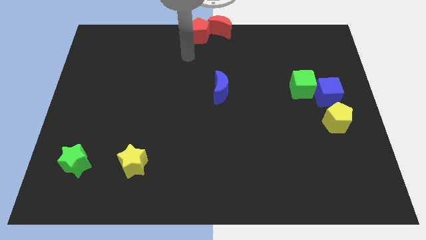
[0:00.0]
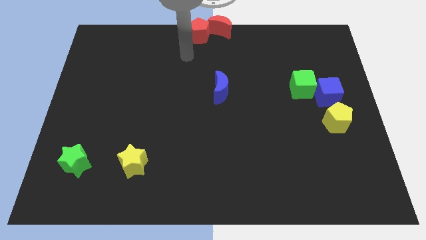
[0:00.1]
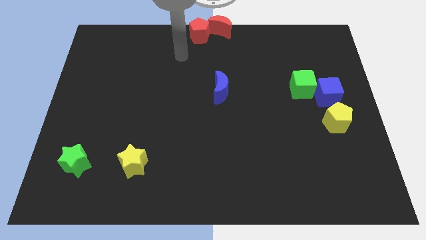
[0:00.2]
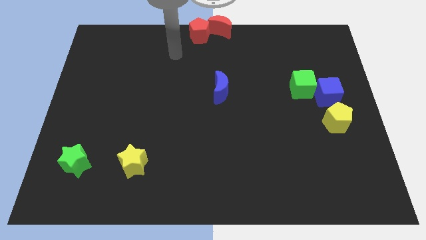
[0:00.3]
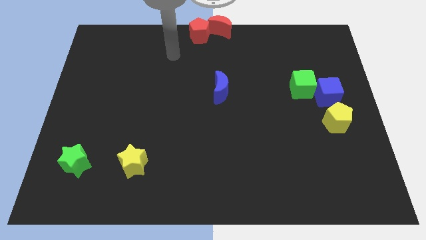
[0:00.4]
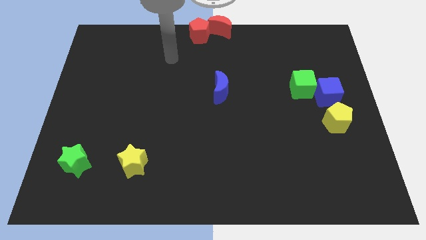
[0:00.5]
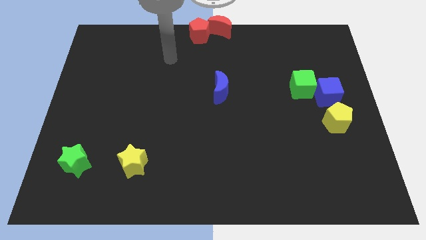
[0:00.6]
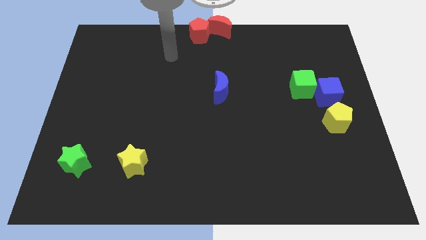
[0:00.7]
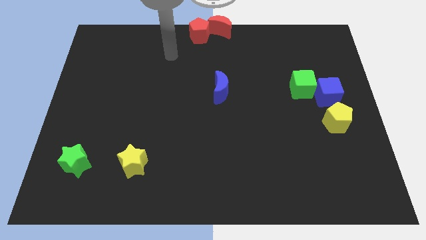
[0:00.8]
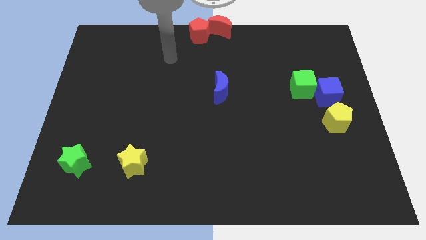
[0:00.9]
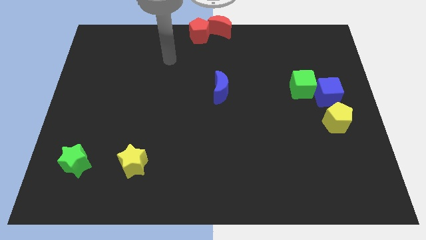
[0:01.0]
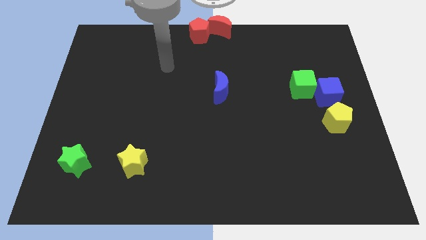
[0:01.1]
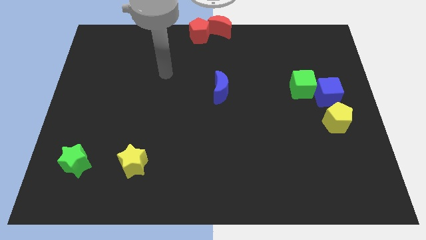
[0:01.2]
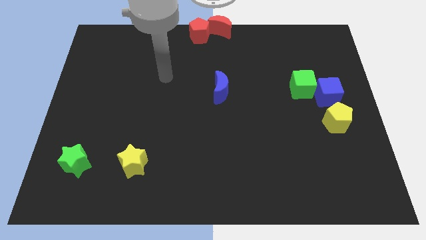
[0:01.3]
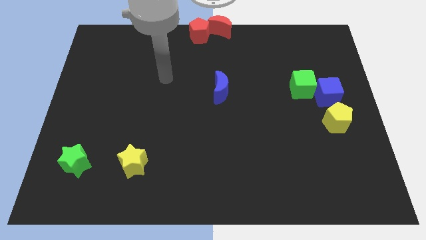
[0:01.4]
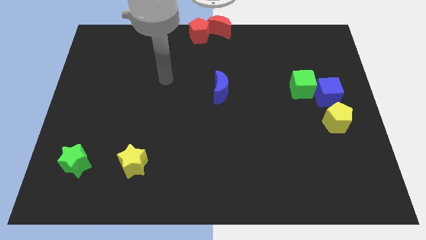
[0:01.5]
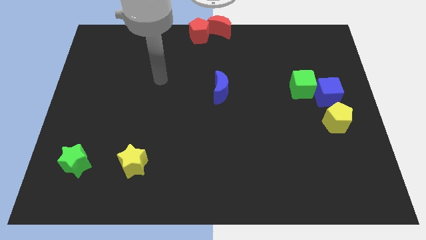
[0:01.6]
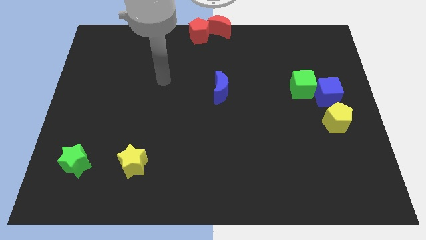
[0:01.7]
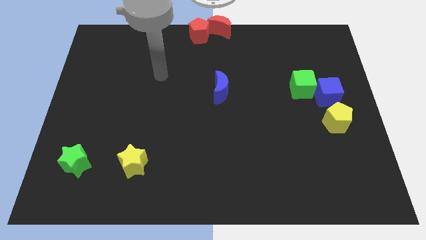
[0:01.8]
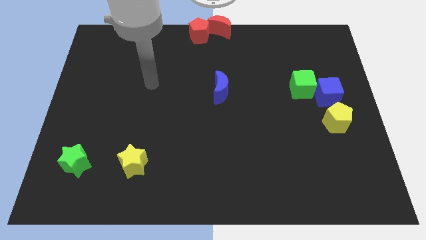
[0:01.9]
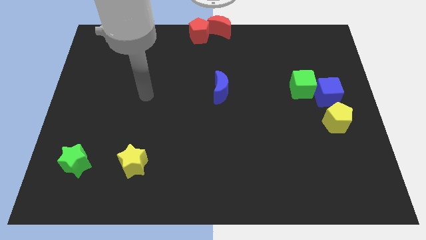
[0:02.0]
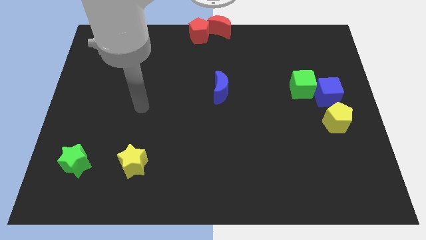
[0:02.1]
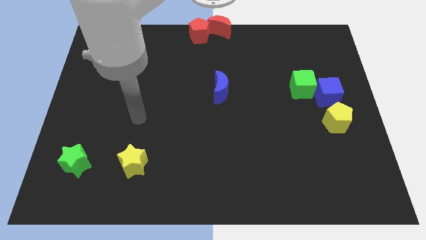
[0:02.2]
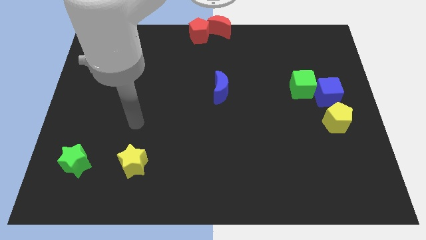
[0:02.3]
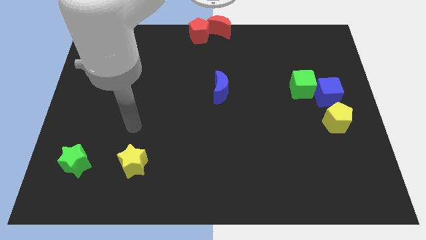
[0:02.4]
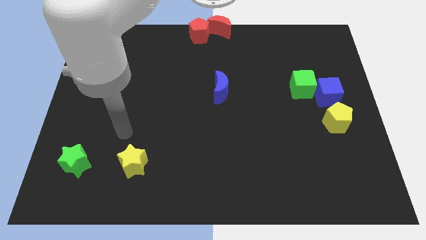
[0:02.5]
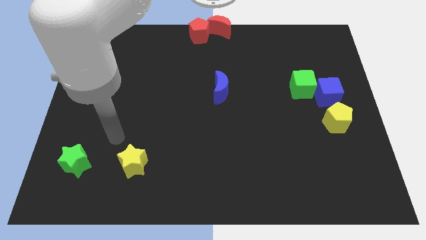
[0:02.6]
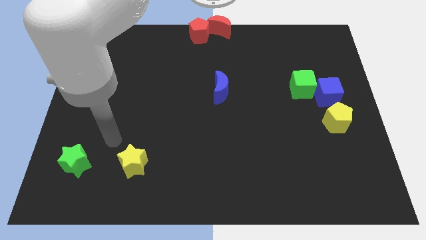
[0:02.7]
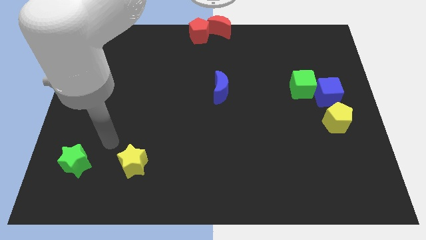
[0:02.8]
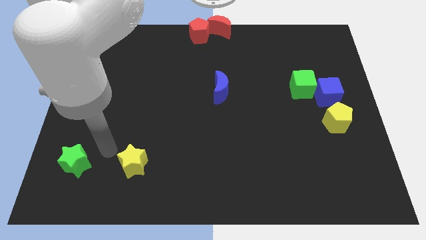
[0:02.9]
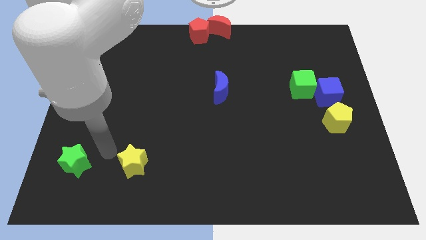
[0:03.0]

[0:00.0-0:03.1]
move your hand away from red pentagon

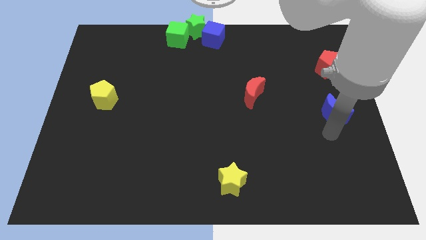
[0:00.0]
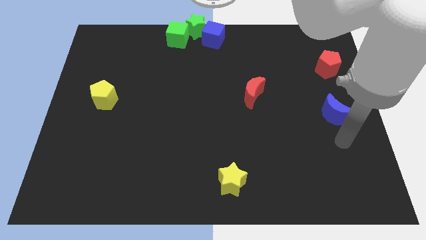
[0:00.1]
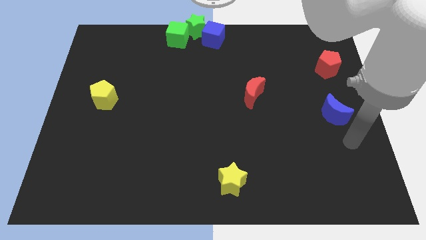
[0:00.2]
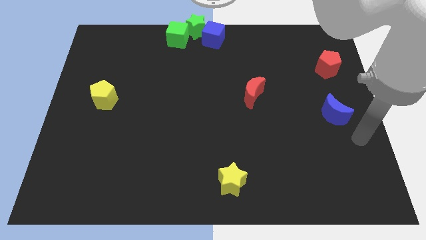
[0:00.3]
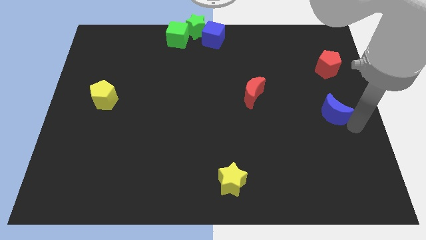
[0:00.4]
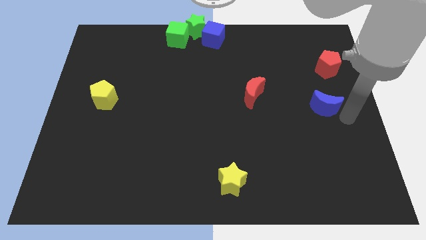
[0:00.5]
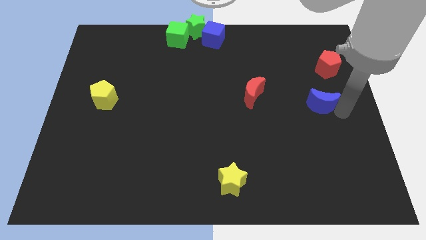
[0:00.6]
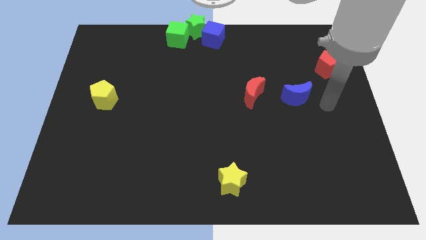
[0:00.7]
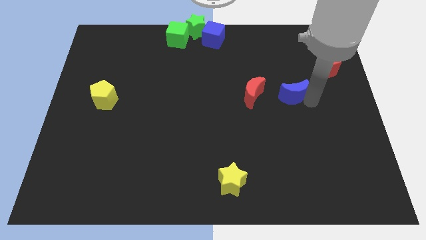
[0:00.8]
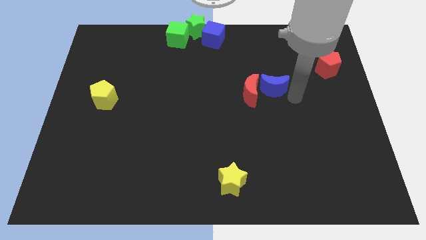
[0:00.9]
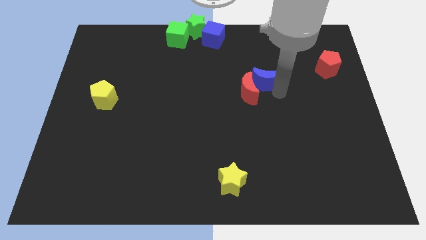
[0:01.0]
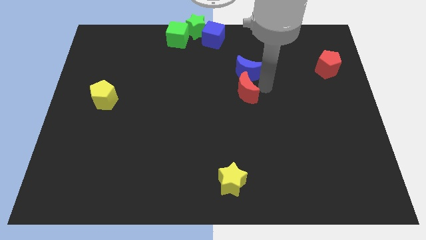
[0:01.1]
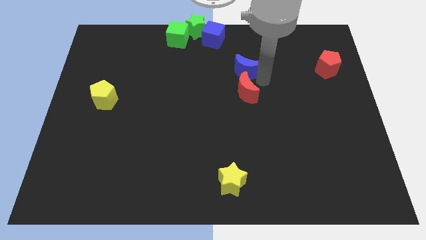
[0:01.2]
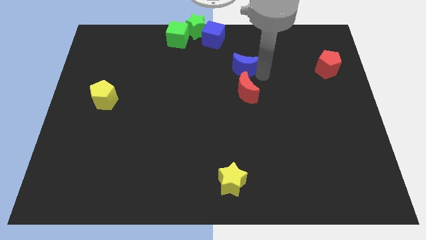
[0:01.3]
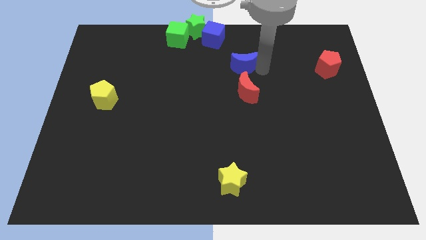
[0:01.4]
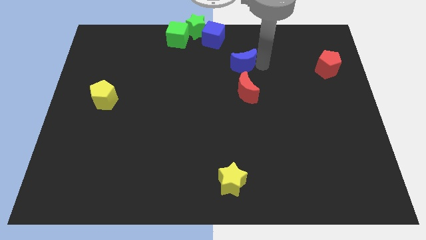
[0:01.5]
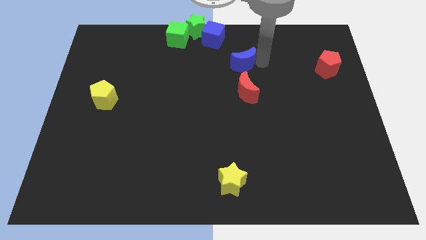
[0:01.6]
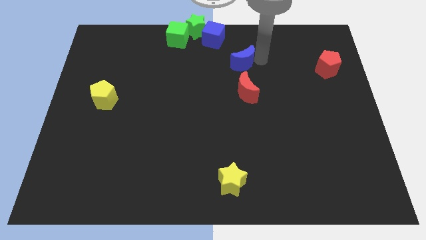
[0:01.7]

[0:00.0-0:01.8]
put the blue moon vertically above the red moon

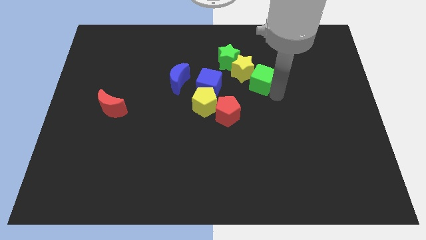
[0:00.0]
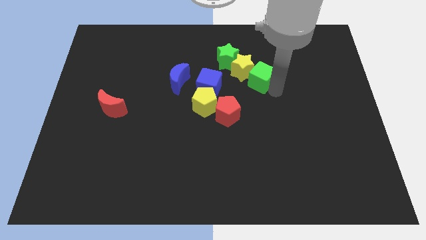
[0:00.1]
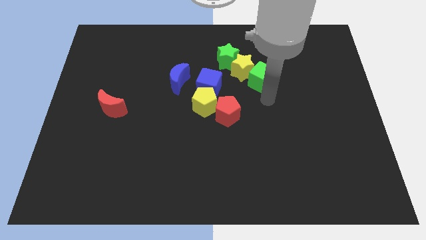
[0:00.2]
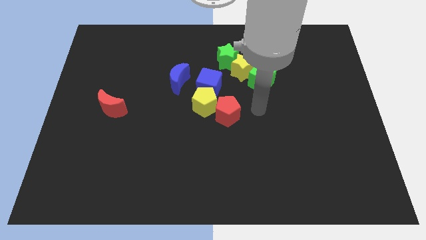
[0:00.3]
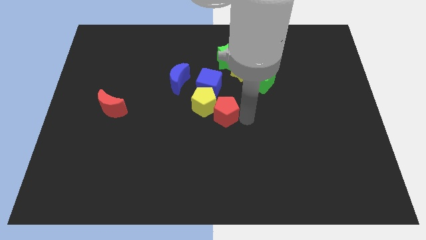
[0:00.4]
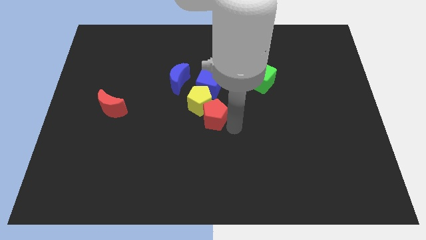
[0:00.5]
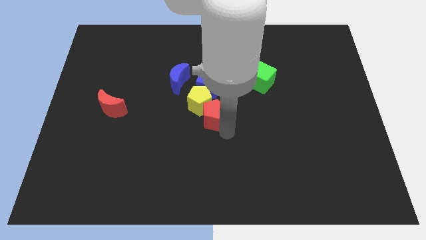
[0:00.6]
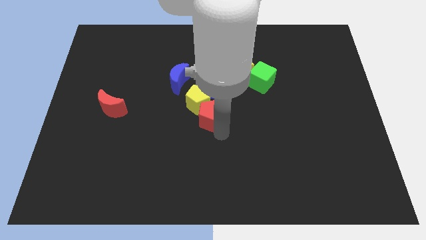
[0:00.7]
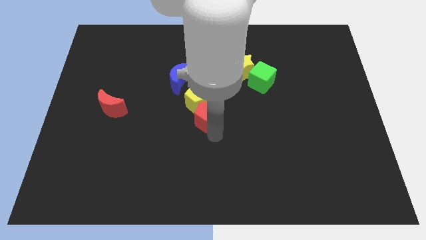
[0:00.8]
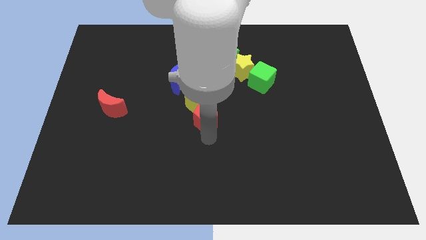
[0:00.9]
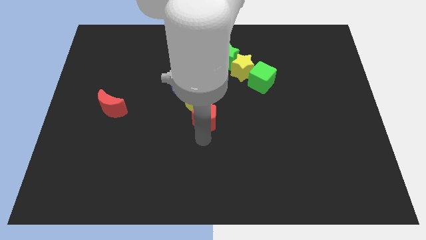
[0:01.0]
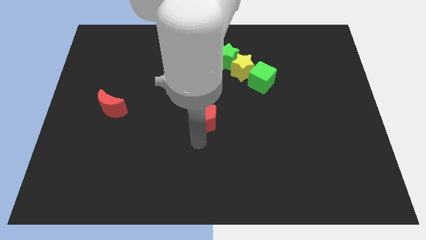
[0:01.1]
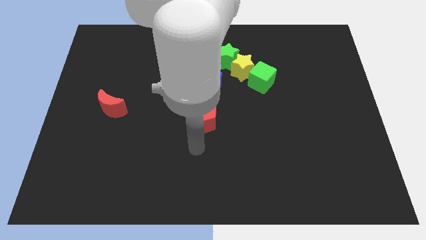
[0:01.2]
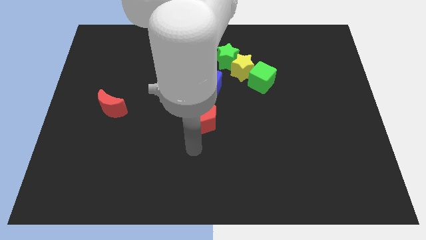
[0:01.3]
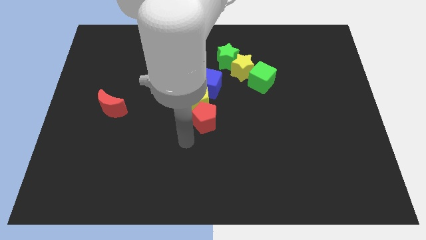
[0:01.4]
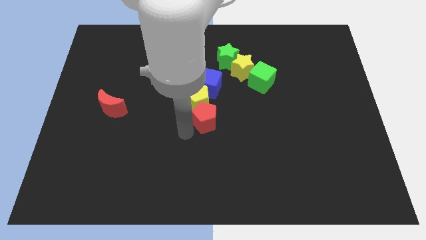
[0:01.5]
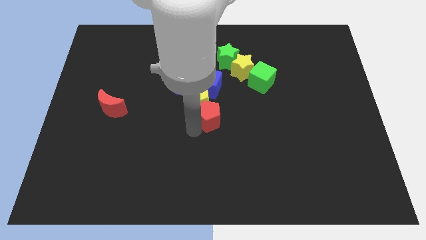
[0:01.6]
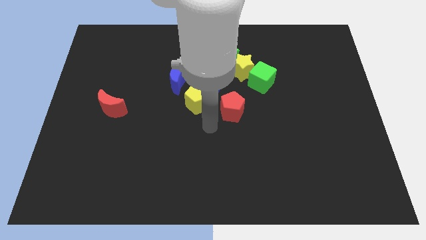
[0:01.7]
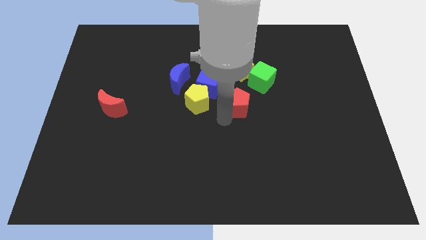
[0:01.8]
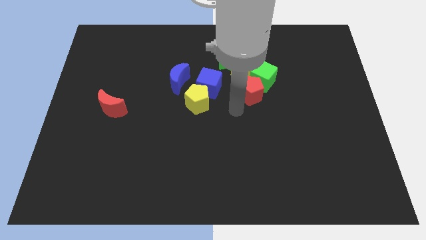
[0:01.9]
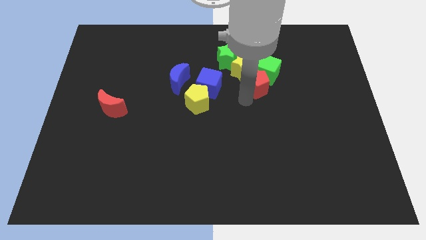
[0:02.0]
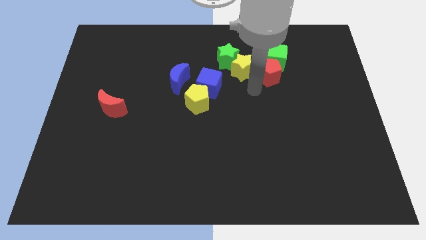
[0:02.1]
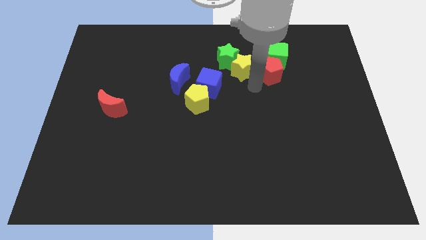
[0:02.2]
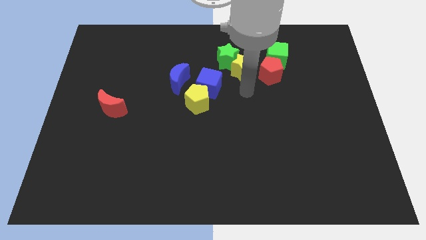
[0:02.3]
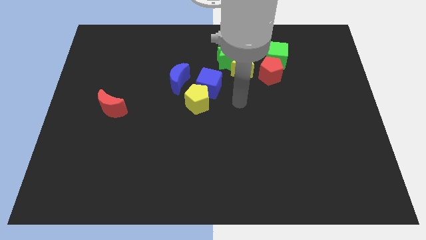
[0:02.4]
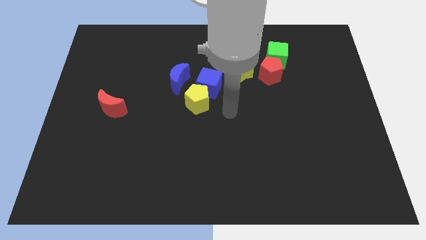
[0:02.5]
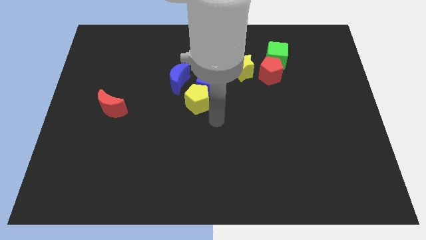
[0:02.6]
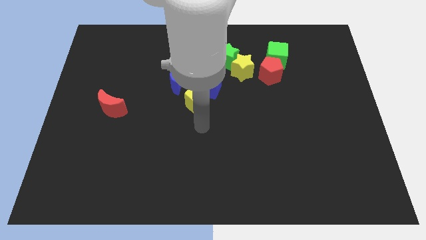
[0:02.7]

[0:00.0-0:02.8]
move the red pentagon below the green cube

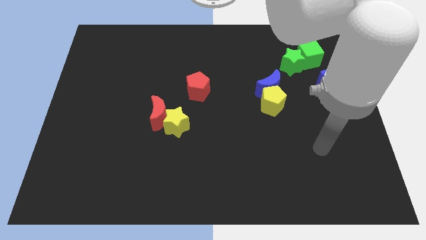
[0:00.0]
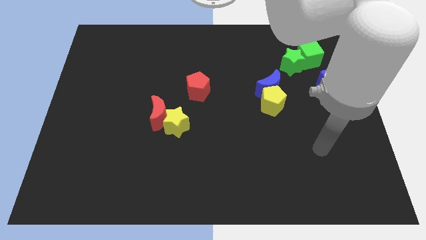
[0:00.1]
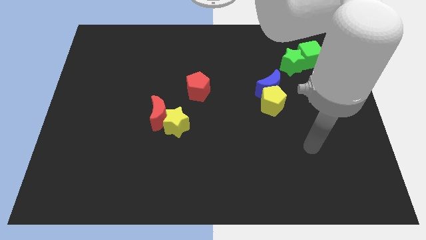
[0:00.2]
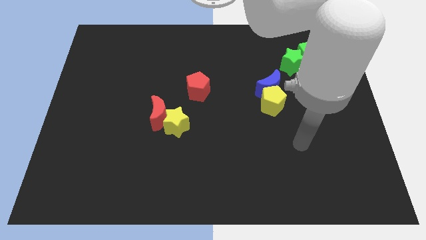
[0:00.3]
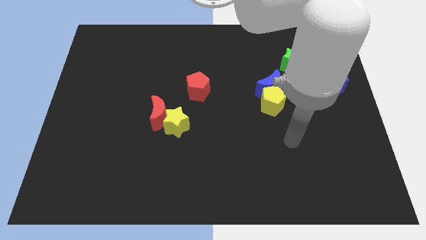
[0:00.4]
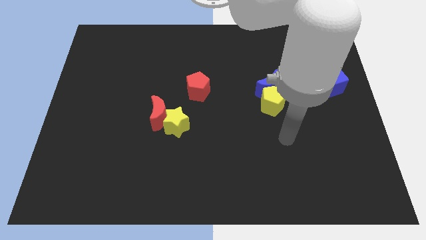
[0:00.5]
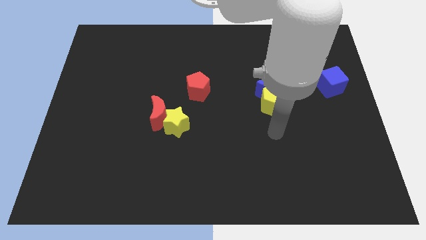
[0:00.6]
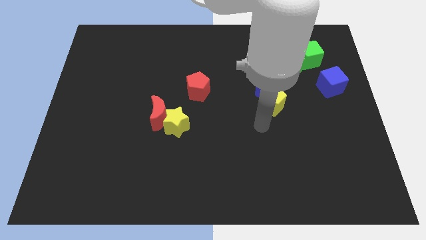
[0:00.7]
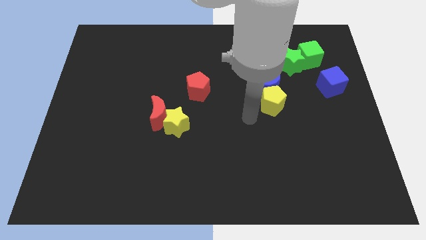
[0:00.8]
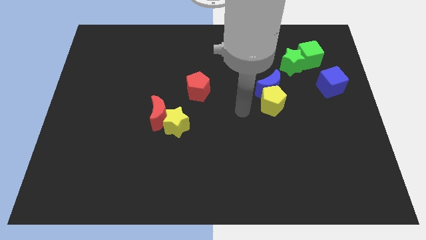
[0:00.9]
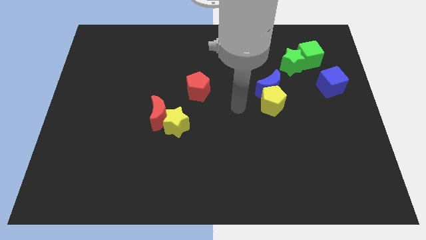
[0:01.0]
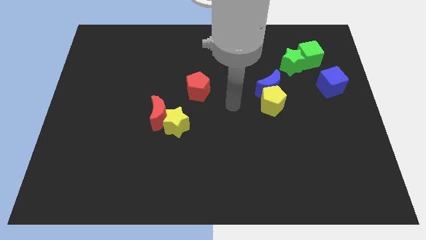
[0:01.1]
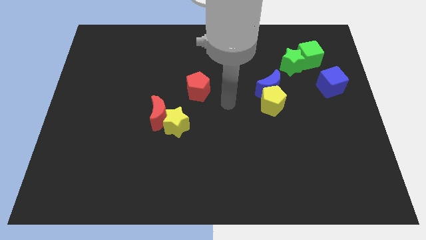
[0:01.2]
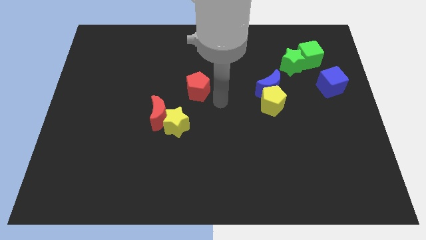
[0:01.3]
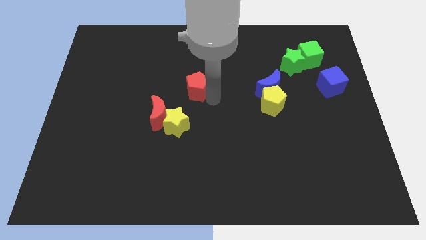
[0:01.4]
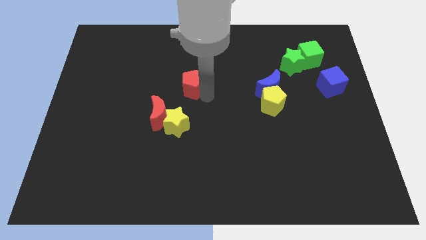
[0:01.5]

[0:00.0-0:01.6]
attach the arm to the red pentagon
